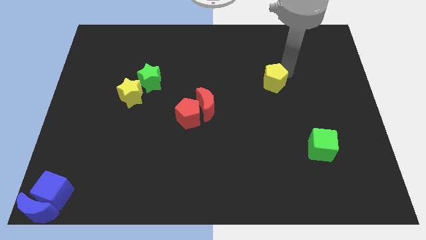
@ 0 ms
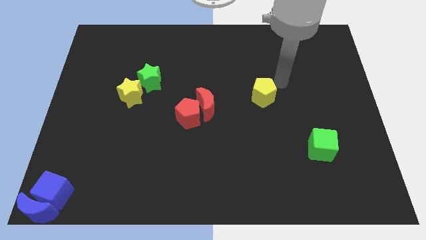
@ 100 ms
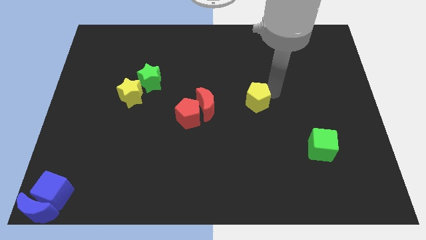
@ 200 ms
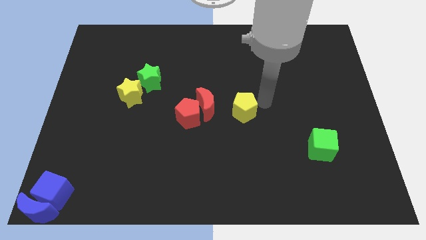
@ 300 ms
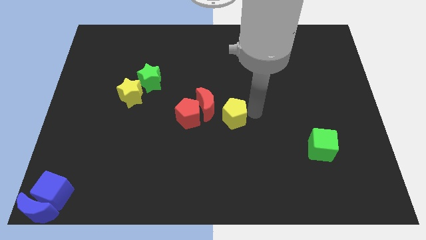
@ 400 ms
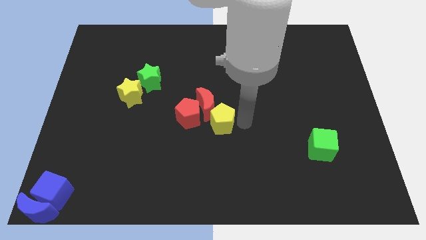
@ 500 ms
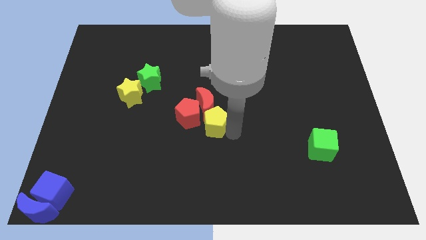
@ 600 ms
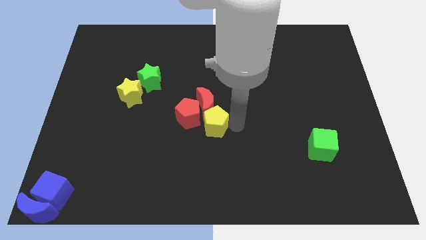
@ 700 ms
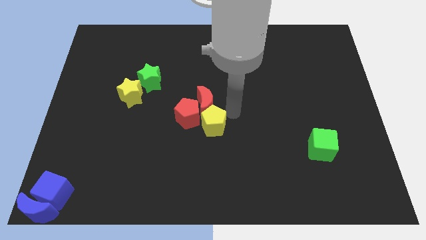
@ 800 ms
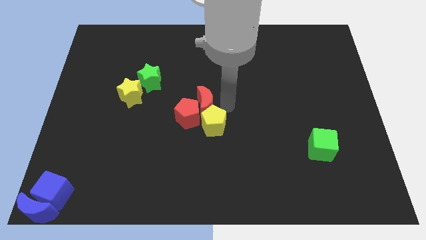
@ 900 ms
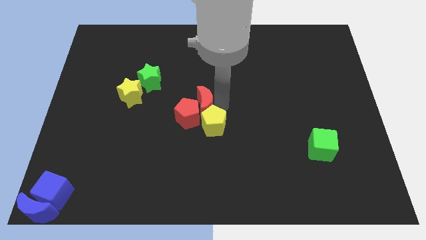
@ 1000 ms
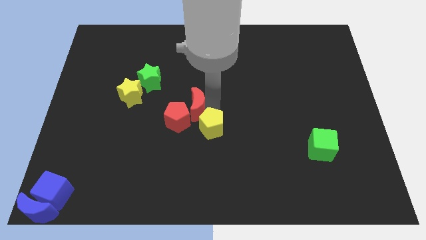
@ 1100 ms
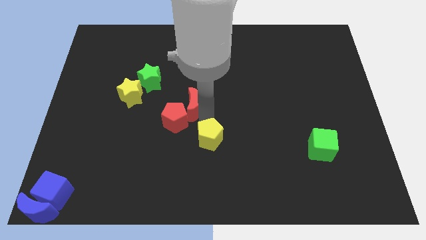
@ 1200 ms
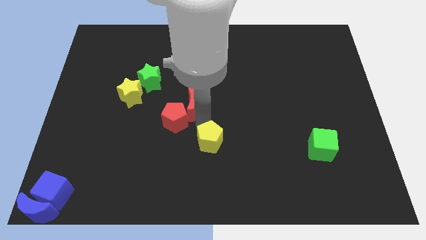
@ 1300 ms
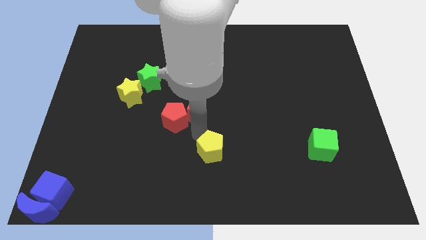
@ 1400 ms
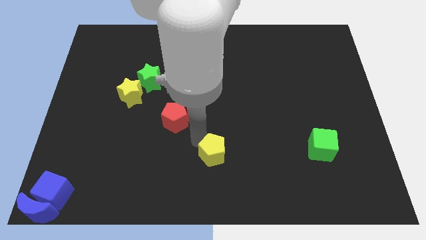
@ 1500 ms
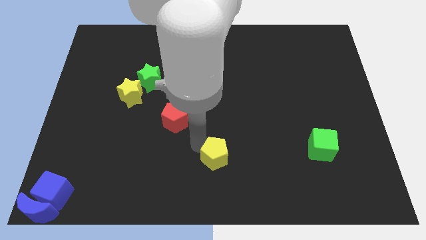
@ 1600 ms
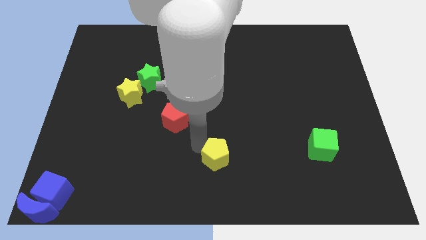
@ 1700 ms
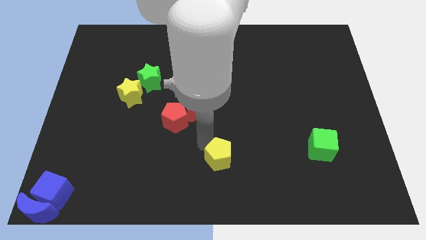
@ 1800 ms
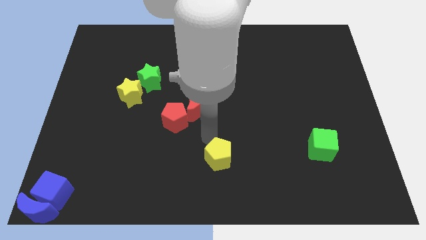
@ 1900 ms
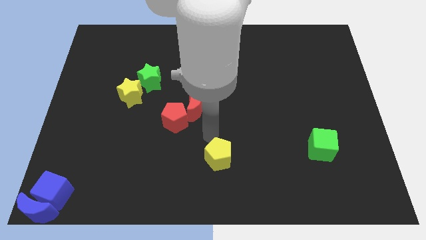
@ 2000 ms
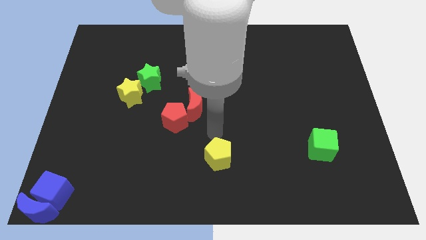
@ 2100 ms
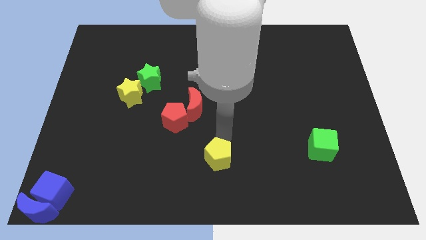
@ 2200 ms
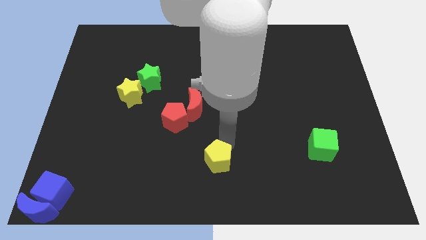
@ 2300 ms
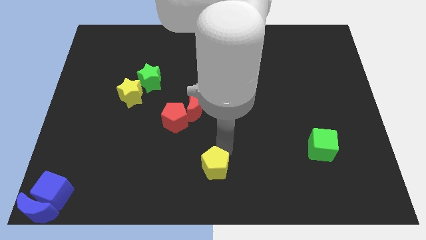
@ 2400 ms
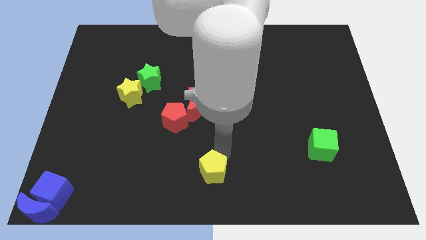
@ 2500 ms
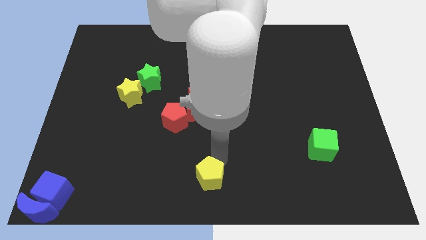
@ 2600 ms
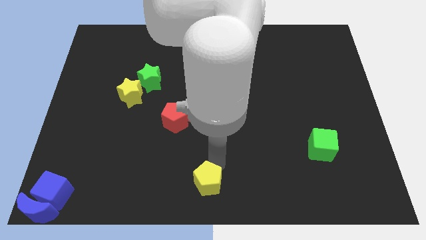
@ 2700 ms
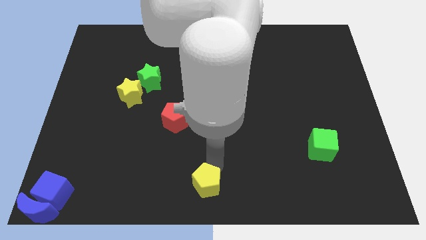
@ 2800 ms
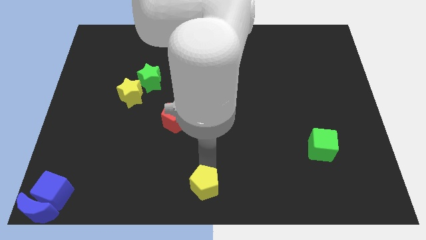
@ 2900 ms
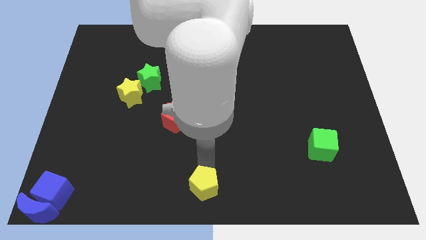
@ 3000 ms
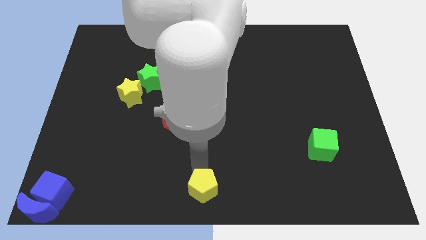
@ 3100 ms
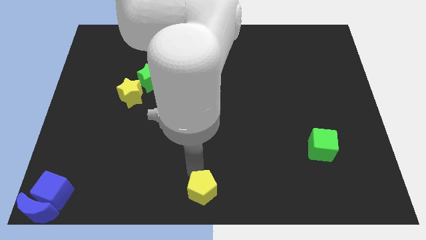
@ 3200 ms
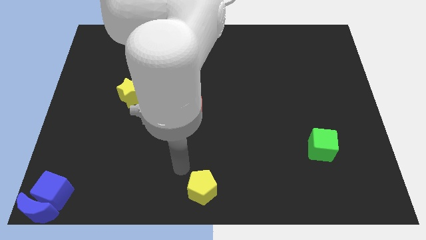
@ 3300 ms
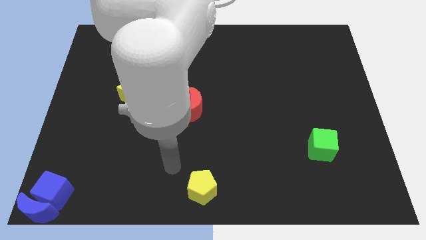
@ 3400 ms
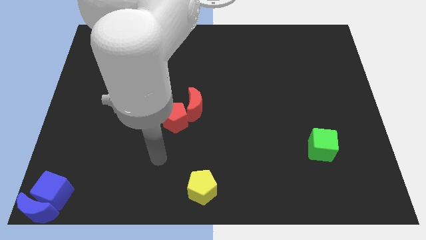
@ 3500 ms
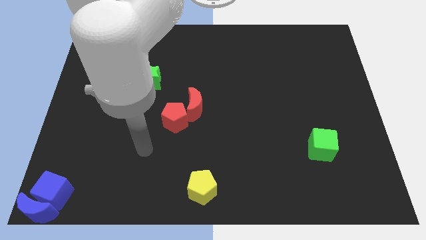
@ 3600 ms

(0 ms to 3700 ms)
place the yellow pentagon to the bottom middle of the board

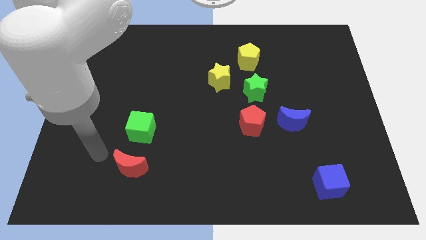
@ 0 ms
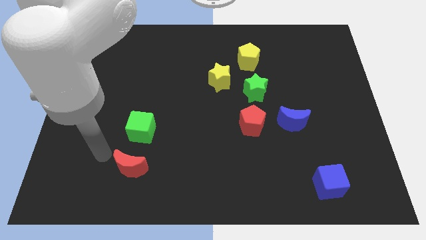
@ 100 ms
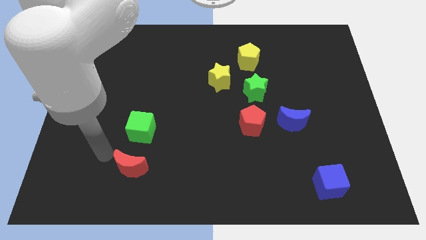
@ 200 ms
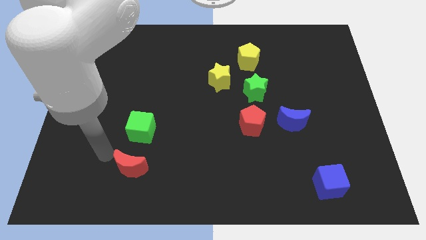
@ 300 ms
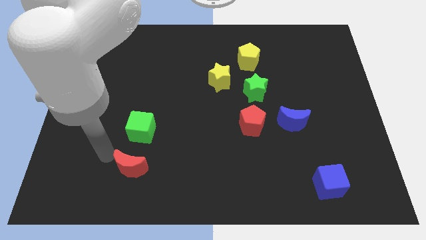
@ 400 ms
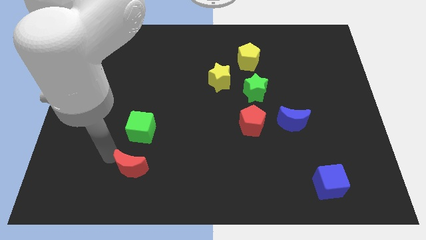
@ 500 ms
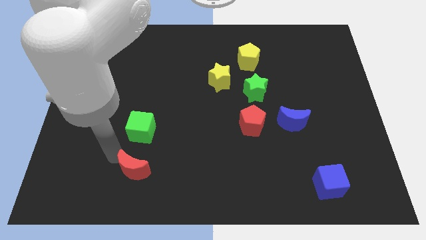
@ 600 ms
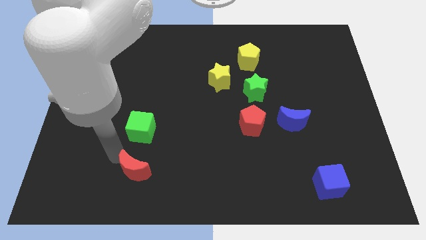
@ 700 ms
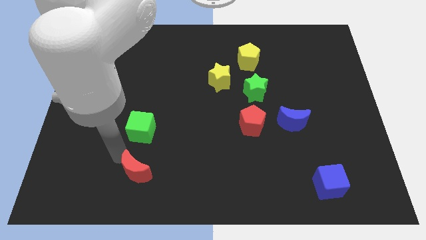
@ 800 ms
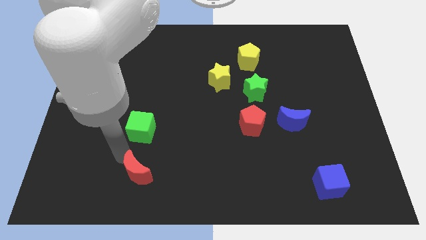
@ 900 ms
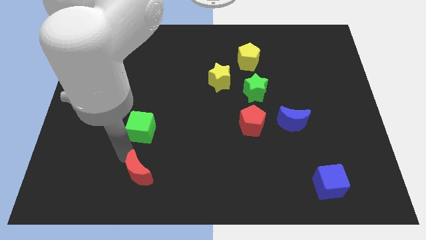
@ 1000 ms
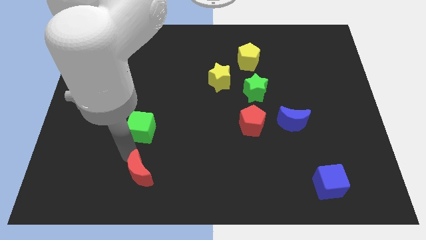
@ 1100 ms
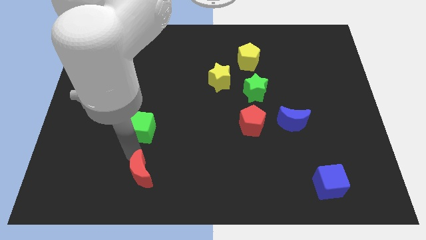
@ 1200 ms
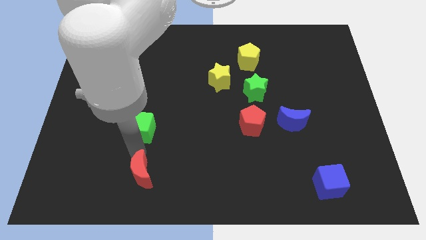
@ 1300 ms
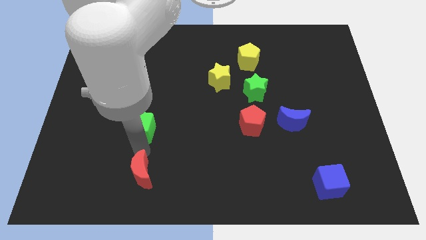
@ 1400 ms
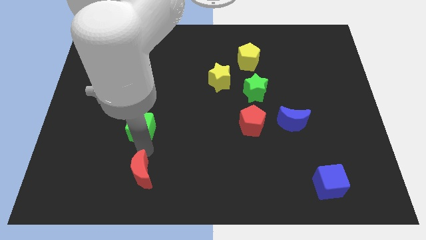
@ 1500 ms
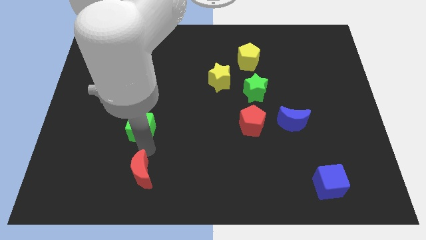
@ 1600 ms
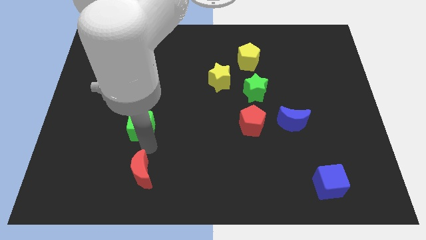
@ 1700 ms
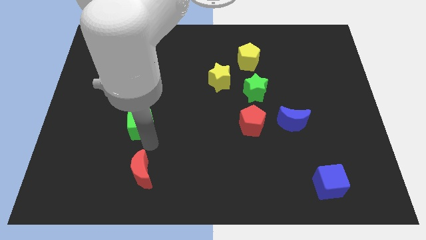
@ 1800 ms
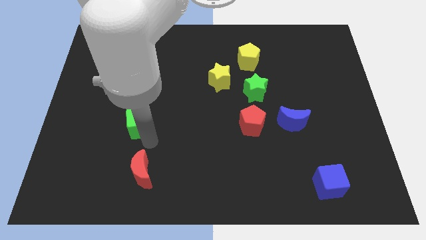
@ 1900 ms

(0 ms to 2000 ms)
push the red moon towards the right

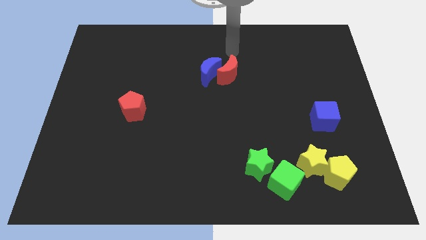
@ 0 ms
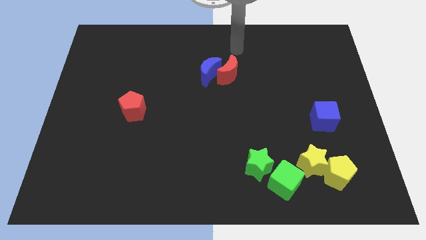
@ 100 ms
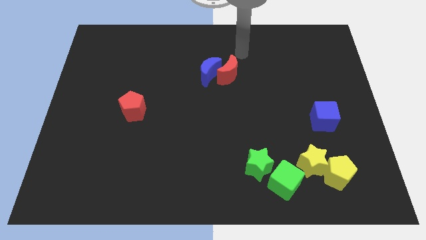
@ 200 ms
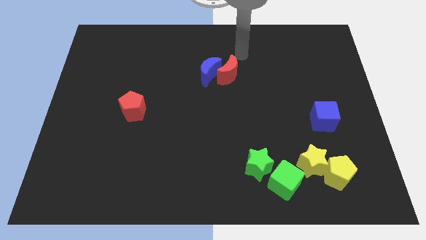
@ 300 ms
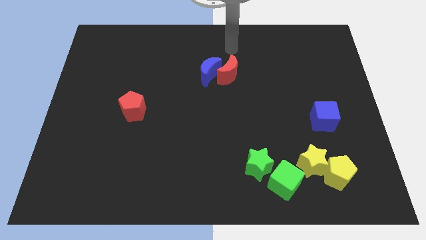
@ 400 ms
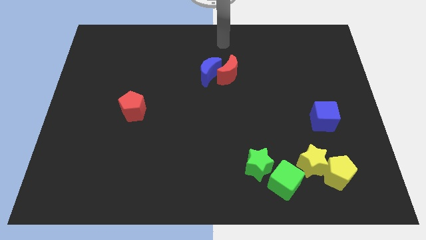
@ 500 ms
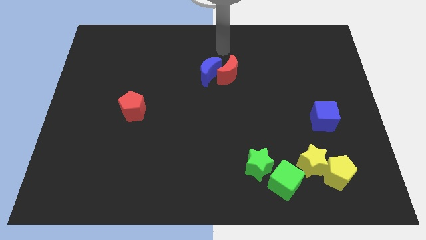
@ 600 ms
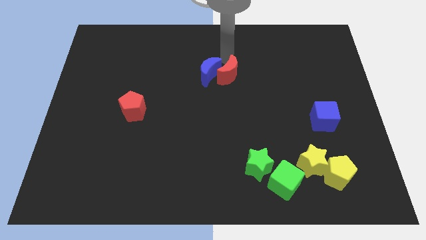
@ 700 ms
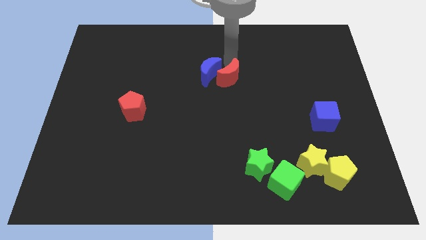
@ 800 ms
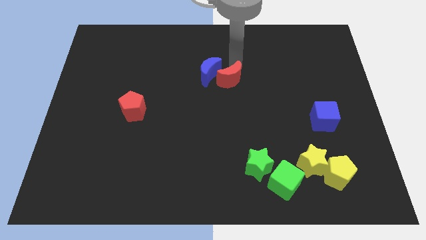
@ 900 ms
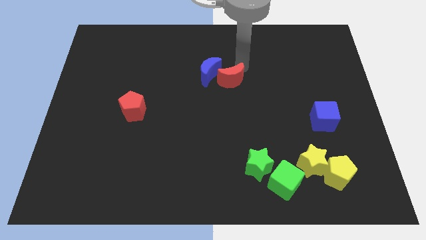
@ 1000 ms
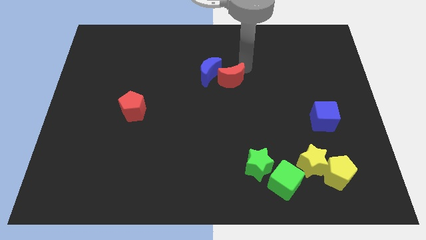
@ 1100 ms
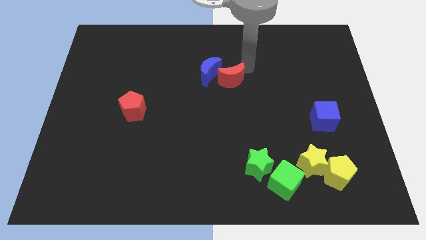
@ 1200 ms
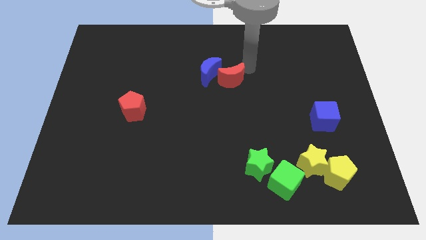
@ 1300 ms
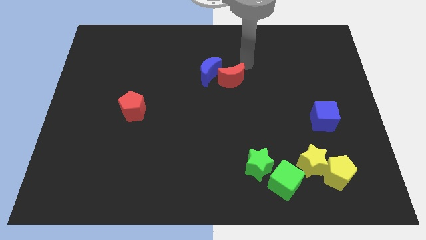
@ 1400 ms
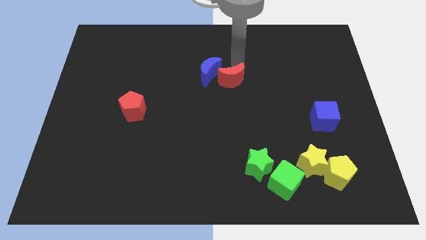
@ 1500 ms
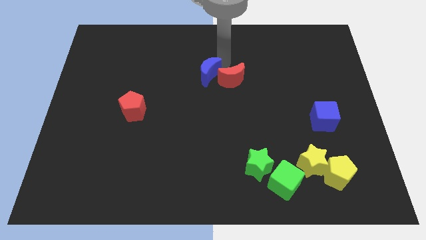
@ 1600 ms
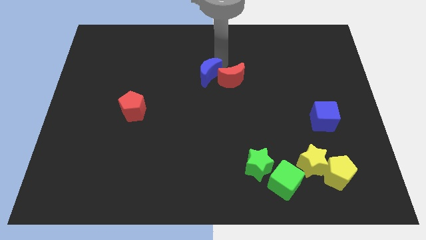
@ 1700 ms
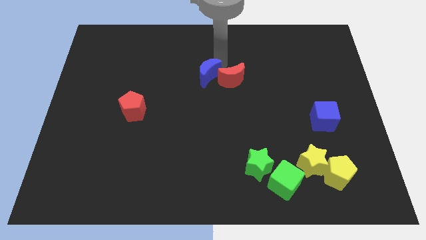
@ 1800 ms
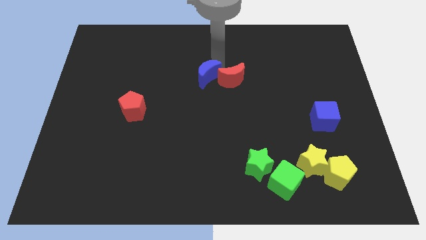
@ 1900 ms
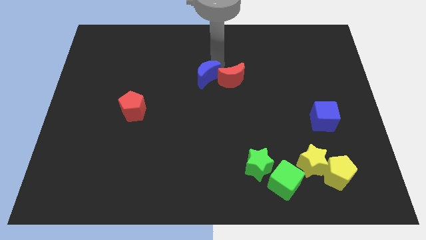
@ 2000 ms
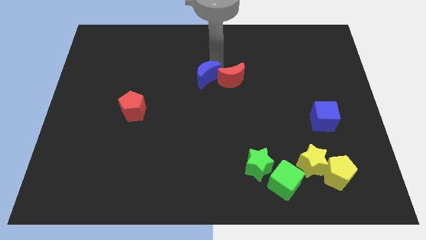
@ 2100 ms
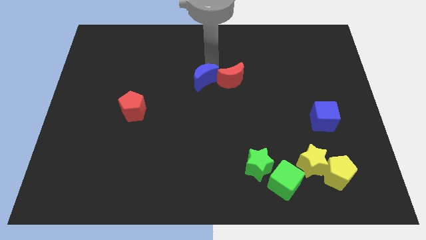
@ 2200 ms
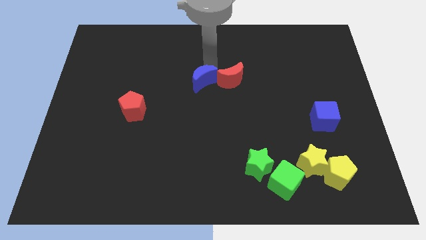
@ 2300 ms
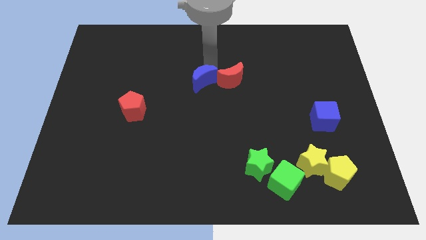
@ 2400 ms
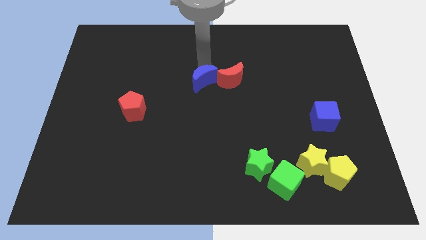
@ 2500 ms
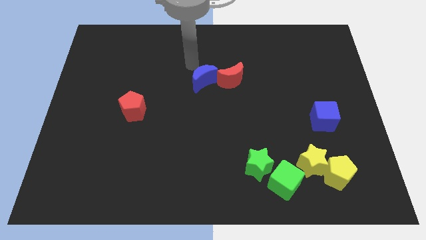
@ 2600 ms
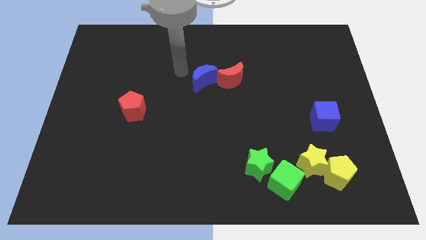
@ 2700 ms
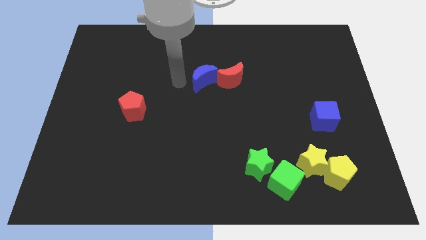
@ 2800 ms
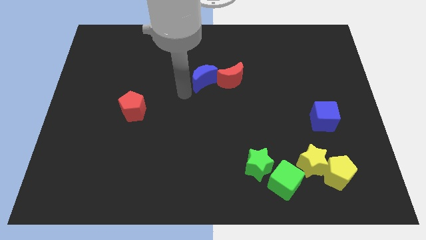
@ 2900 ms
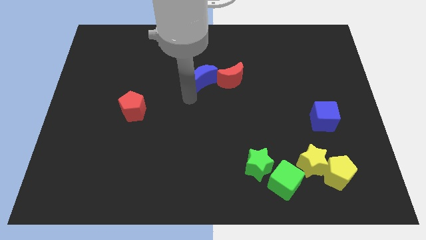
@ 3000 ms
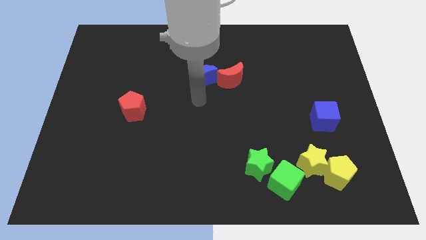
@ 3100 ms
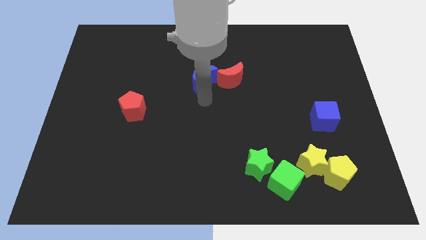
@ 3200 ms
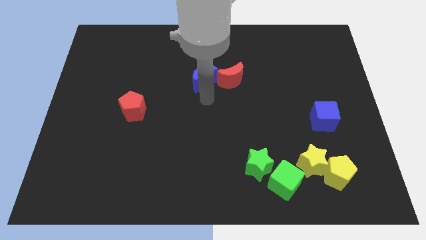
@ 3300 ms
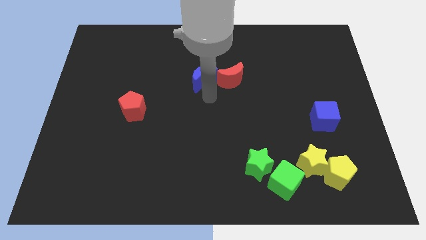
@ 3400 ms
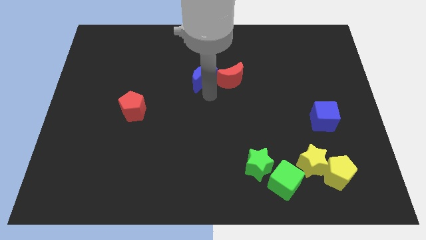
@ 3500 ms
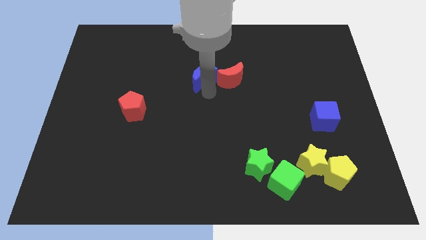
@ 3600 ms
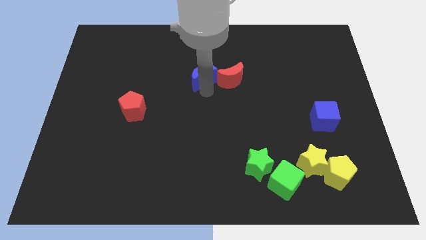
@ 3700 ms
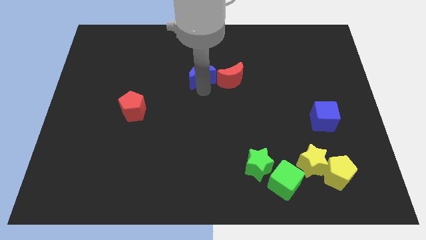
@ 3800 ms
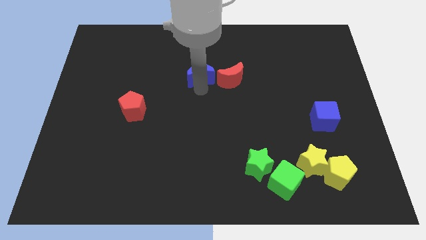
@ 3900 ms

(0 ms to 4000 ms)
place the blue moon to the left side of the red crescent
